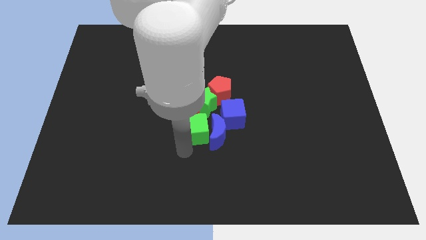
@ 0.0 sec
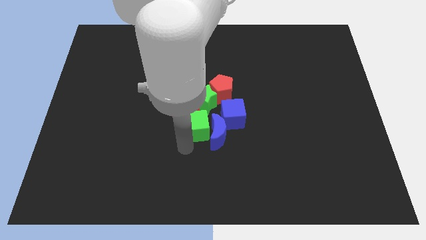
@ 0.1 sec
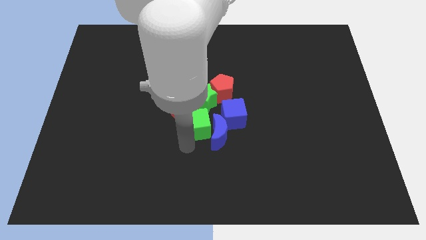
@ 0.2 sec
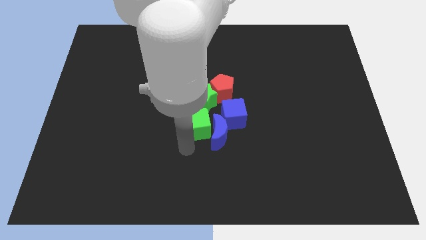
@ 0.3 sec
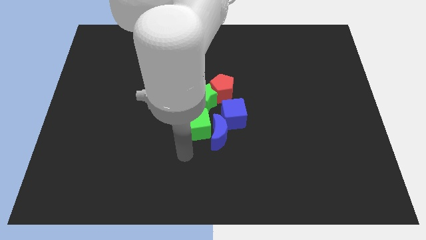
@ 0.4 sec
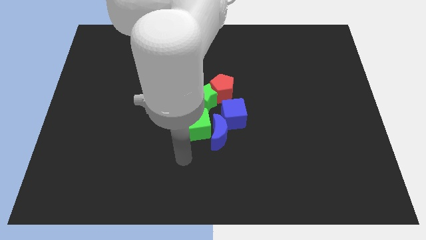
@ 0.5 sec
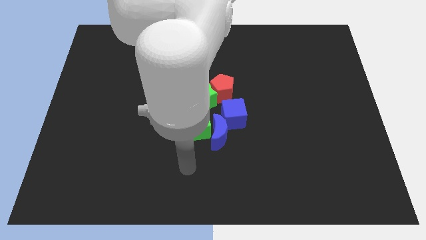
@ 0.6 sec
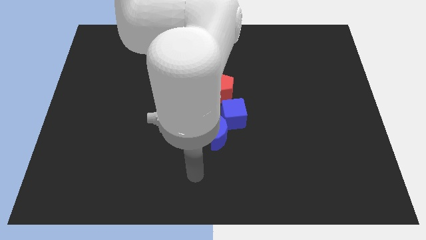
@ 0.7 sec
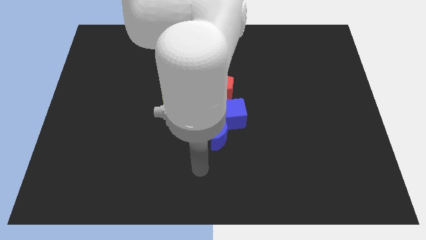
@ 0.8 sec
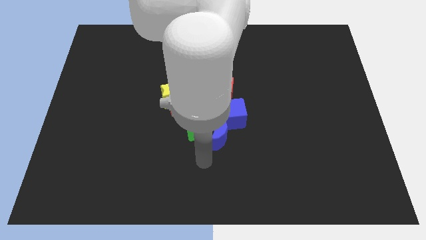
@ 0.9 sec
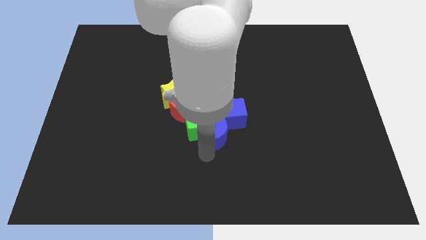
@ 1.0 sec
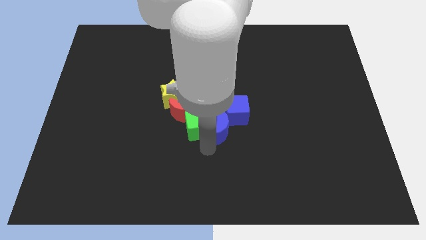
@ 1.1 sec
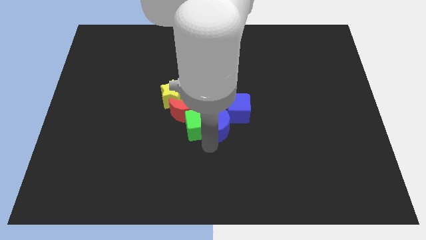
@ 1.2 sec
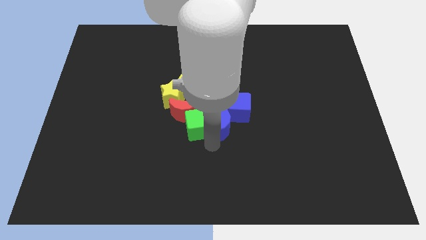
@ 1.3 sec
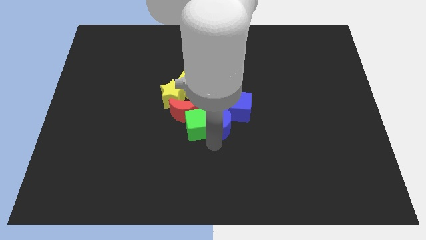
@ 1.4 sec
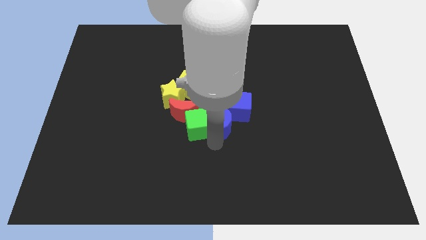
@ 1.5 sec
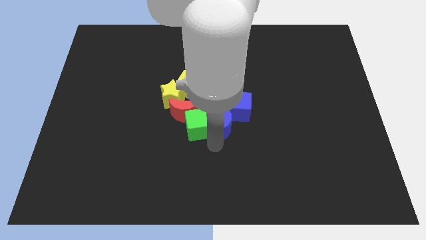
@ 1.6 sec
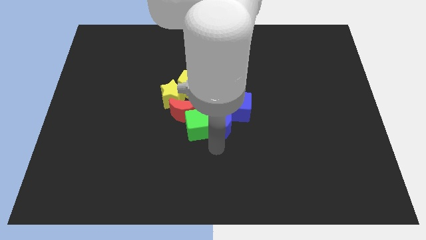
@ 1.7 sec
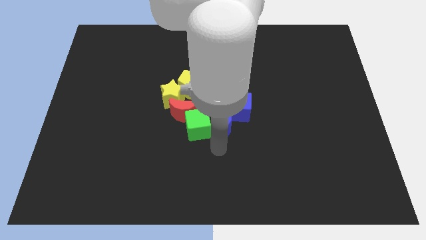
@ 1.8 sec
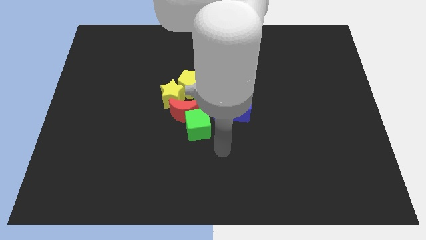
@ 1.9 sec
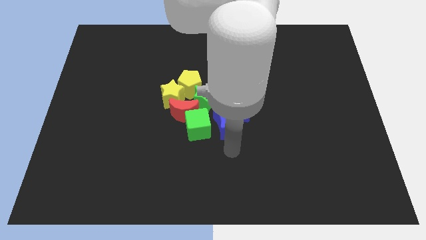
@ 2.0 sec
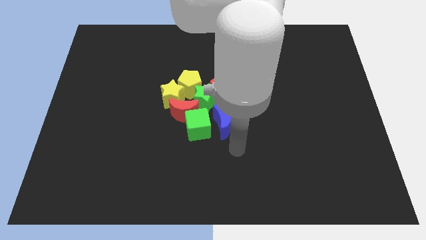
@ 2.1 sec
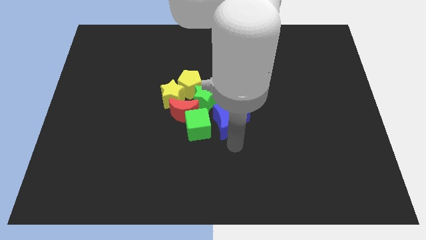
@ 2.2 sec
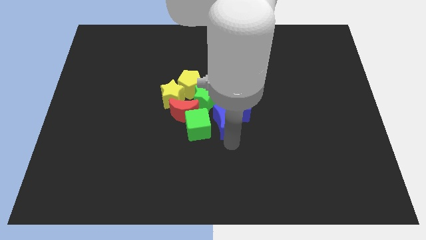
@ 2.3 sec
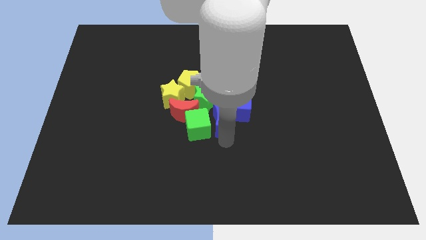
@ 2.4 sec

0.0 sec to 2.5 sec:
push the green cube and blue moon into the group of blocks

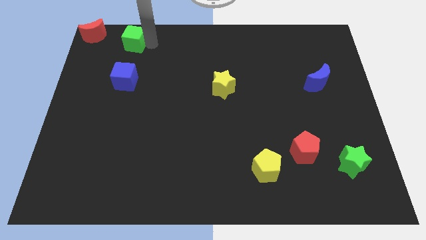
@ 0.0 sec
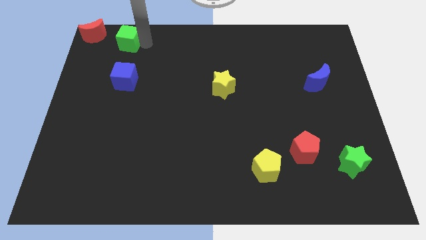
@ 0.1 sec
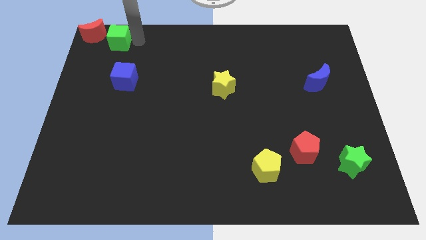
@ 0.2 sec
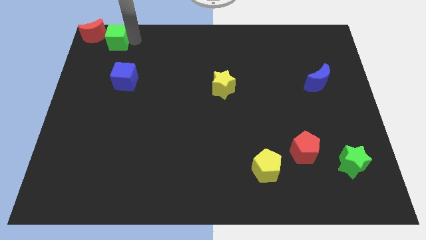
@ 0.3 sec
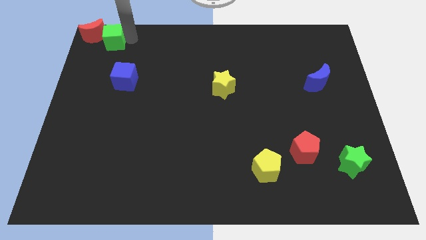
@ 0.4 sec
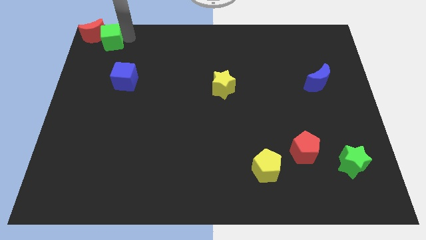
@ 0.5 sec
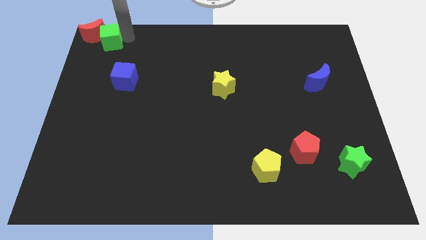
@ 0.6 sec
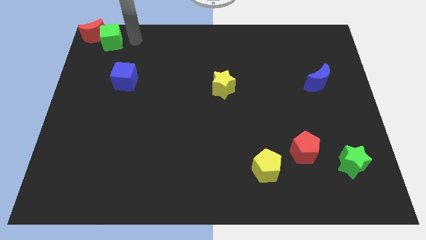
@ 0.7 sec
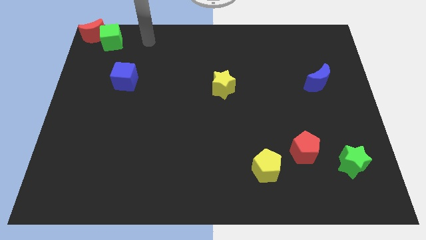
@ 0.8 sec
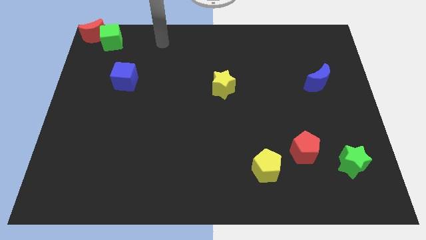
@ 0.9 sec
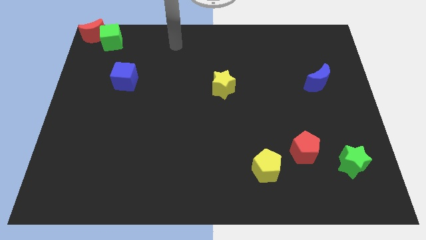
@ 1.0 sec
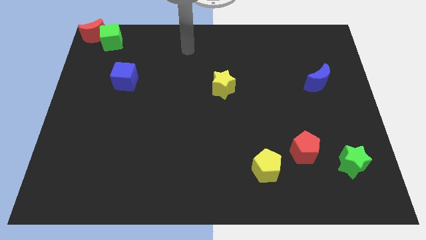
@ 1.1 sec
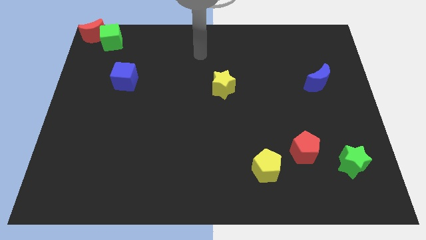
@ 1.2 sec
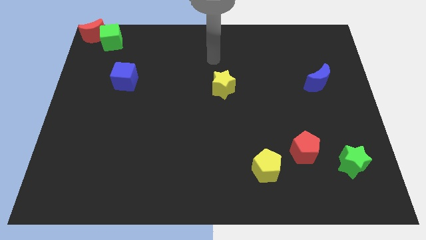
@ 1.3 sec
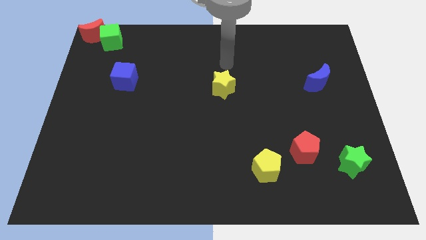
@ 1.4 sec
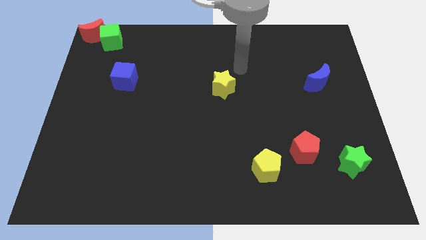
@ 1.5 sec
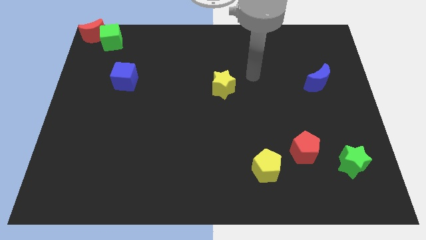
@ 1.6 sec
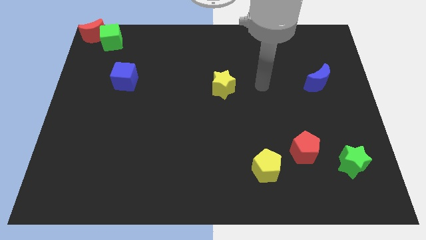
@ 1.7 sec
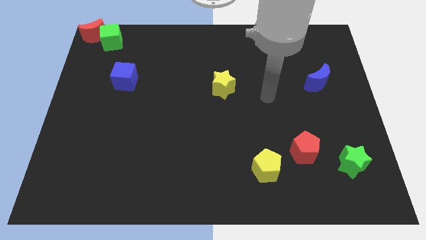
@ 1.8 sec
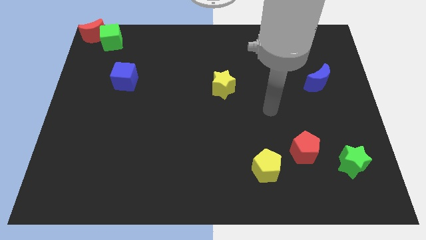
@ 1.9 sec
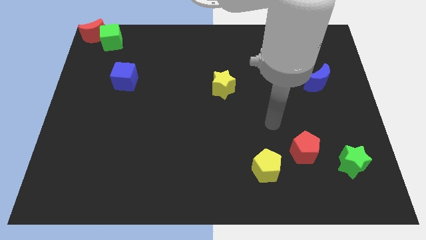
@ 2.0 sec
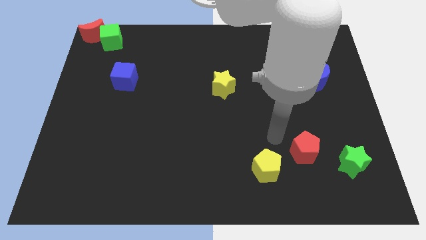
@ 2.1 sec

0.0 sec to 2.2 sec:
push the green cube into the red crescent

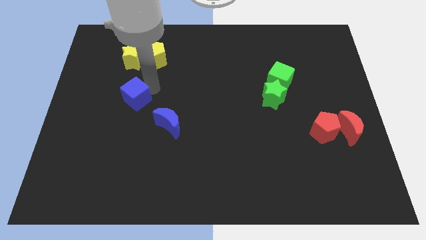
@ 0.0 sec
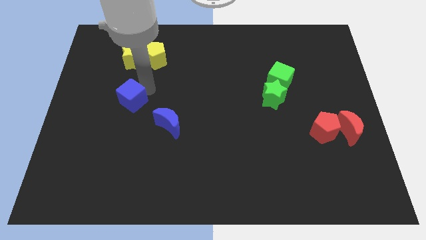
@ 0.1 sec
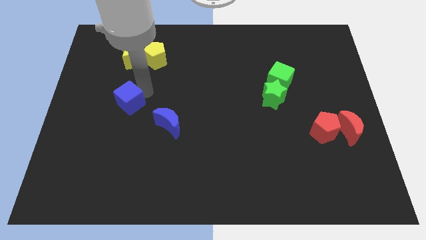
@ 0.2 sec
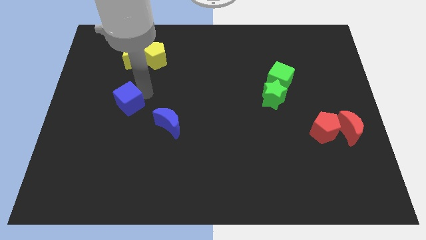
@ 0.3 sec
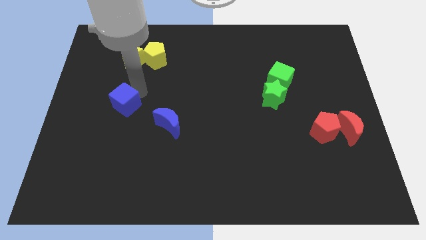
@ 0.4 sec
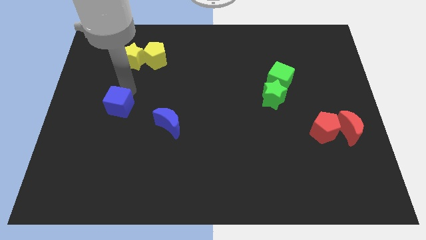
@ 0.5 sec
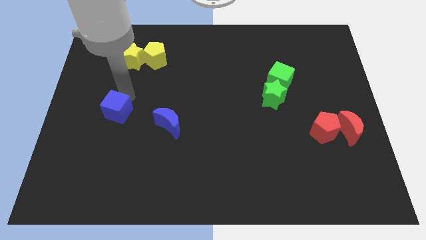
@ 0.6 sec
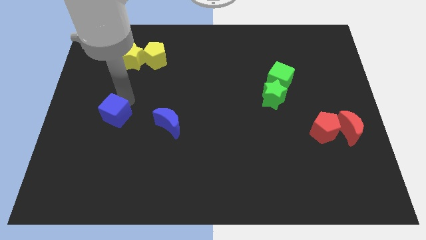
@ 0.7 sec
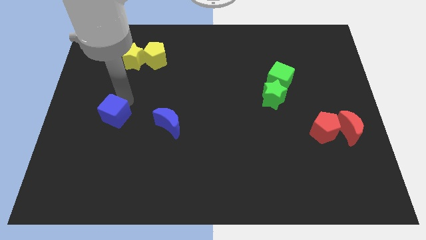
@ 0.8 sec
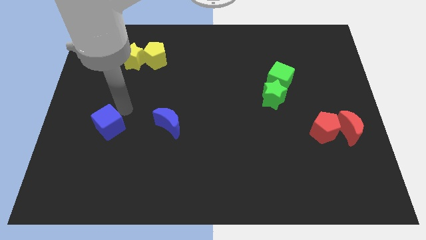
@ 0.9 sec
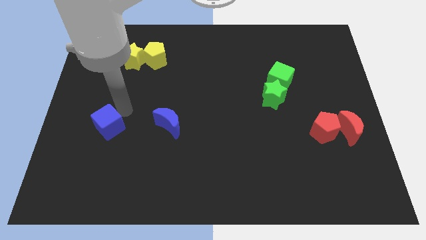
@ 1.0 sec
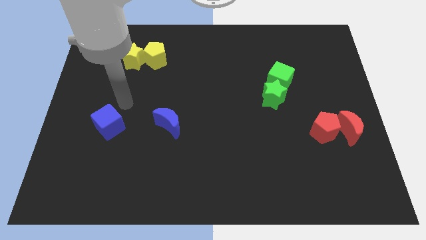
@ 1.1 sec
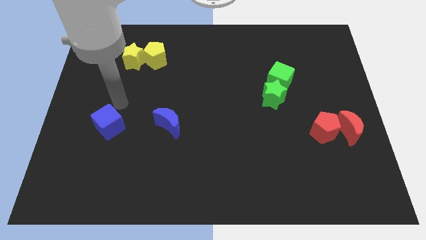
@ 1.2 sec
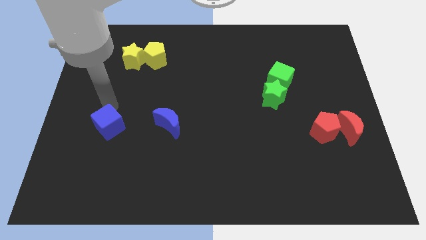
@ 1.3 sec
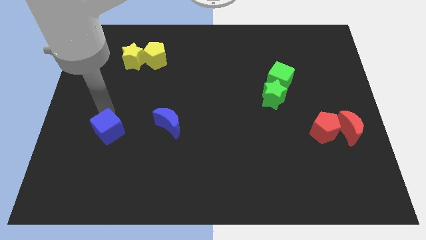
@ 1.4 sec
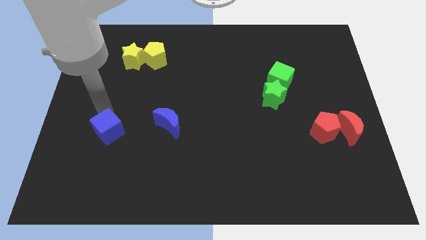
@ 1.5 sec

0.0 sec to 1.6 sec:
slide blue cube parallel left to the blue crescent

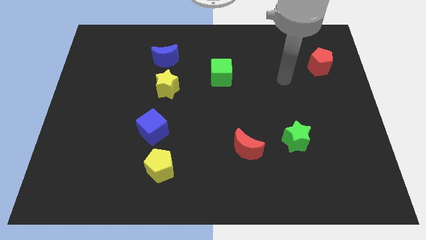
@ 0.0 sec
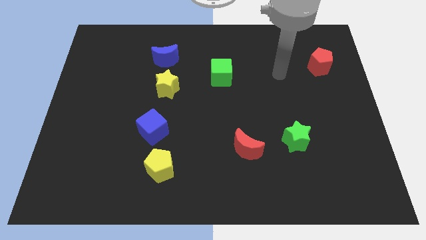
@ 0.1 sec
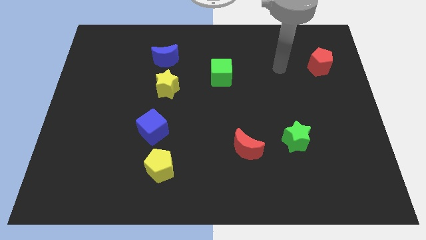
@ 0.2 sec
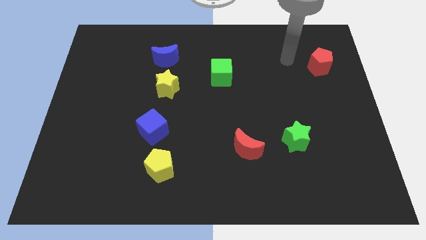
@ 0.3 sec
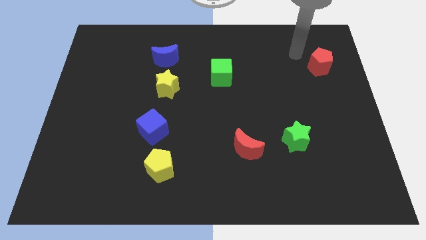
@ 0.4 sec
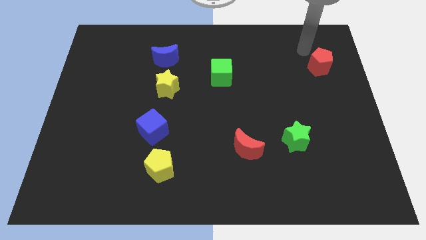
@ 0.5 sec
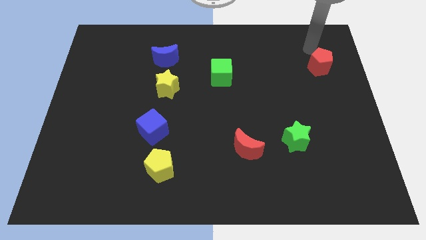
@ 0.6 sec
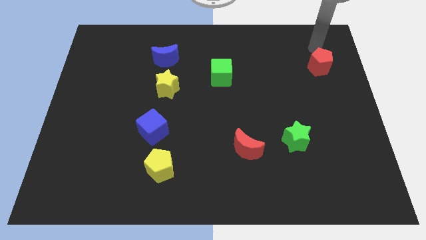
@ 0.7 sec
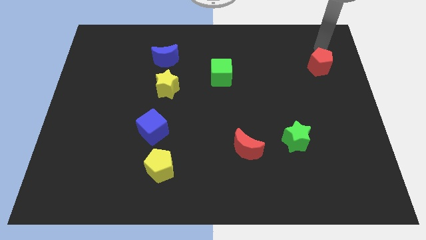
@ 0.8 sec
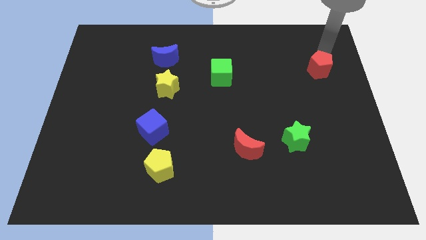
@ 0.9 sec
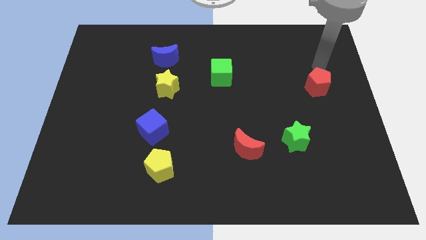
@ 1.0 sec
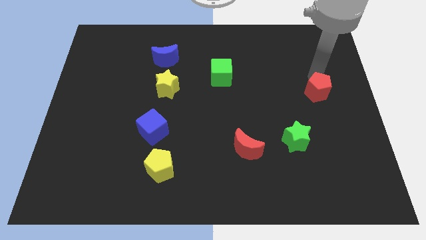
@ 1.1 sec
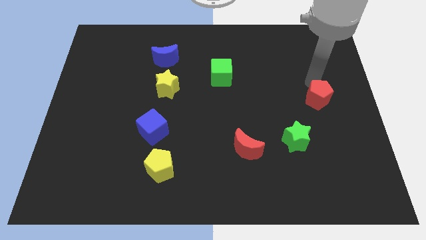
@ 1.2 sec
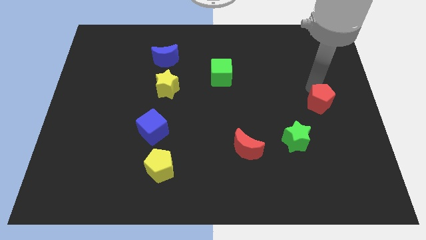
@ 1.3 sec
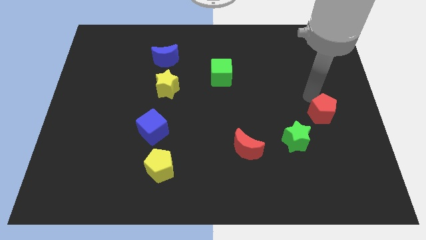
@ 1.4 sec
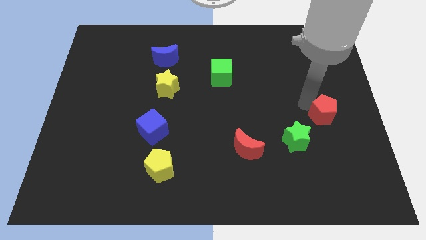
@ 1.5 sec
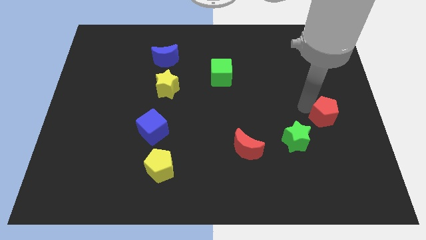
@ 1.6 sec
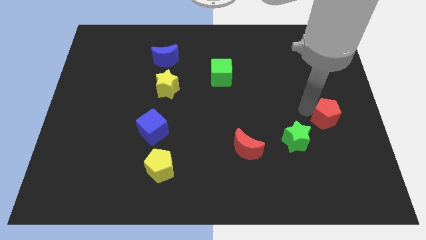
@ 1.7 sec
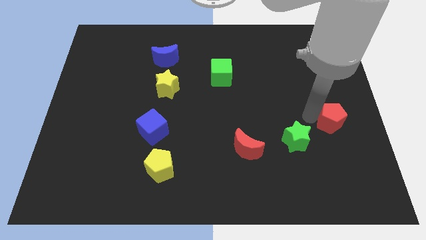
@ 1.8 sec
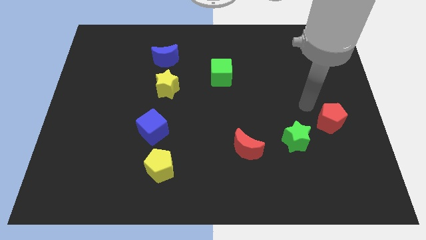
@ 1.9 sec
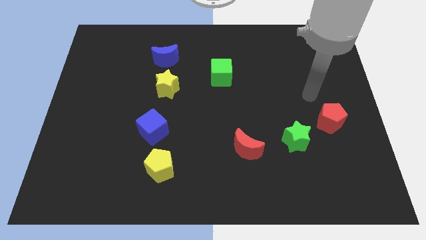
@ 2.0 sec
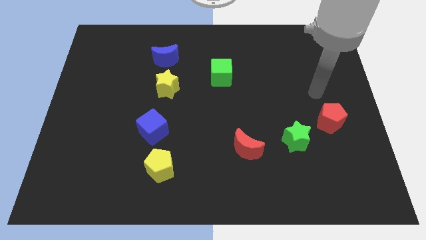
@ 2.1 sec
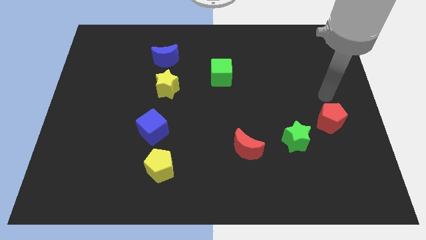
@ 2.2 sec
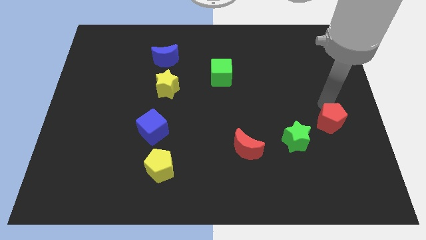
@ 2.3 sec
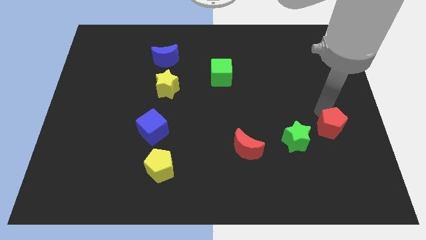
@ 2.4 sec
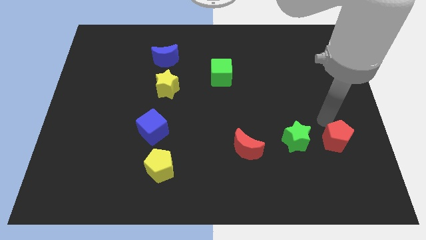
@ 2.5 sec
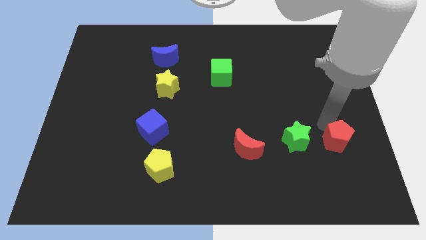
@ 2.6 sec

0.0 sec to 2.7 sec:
place red pentagon beside green star
